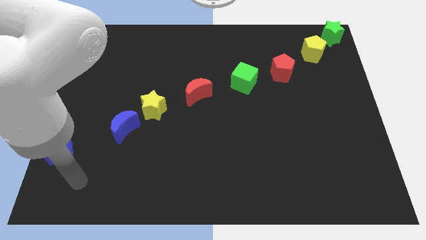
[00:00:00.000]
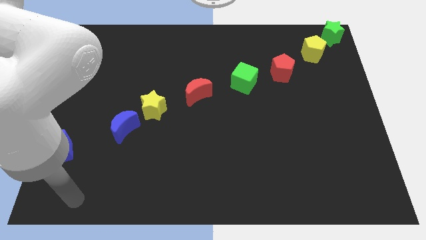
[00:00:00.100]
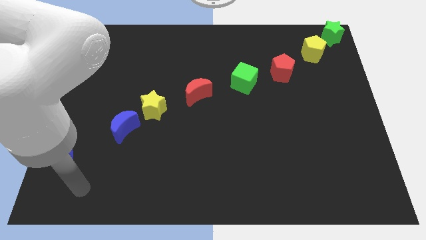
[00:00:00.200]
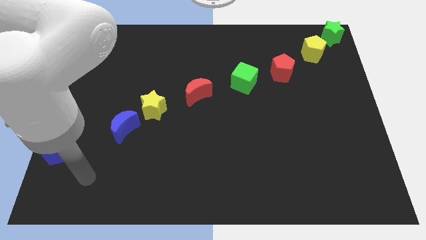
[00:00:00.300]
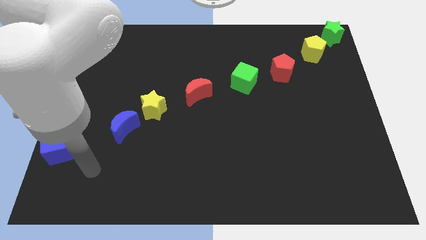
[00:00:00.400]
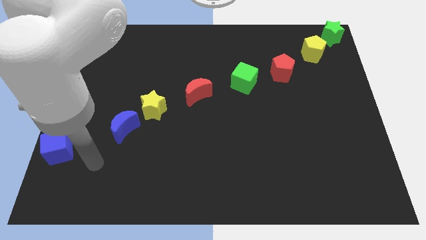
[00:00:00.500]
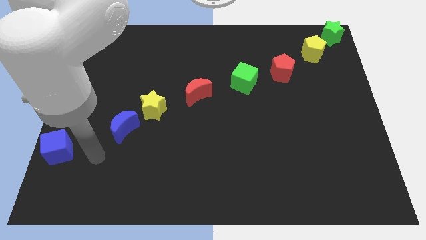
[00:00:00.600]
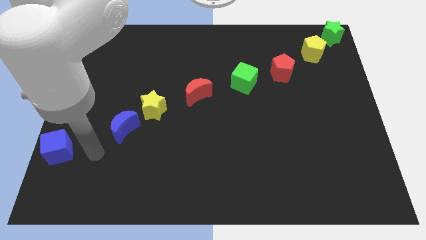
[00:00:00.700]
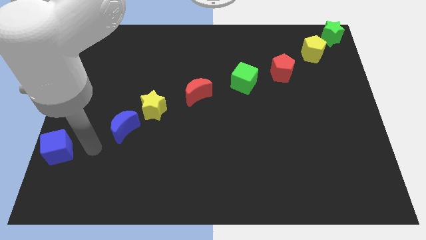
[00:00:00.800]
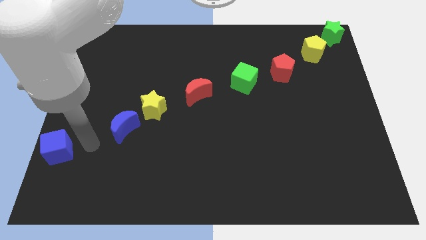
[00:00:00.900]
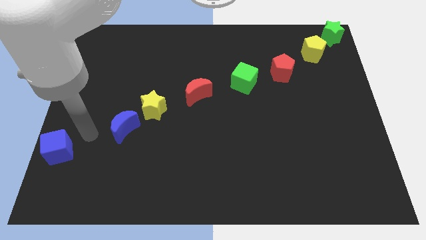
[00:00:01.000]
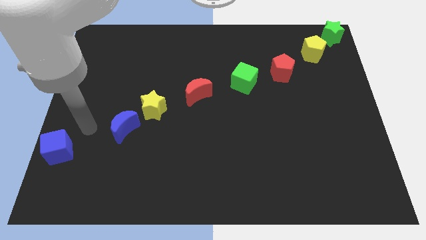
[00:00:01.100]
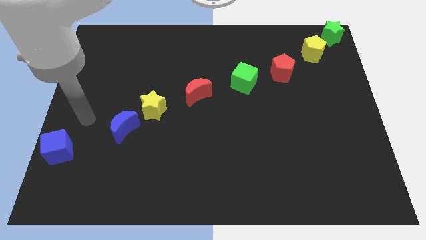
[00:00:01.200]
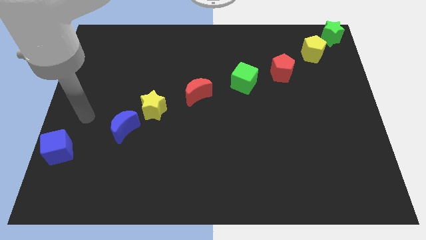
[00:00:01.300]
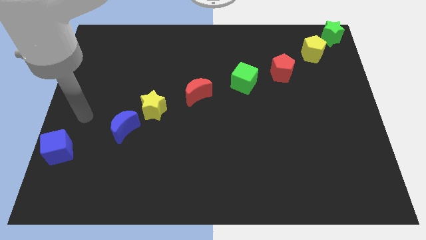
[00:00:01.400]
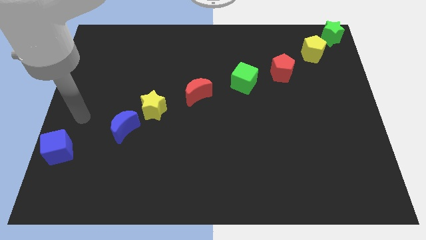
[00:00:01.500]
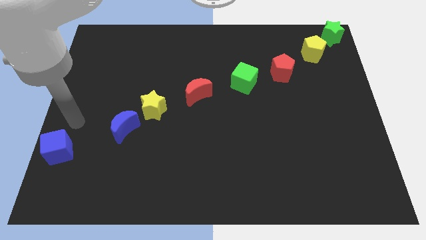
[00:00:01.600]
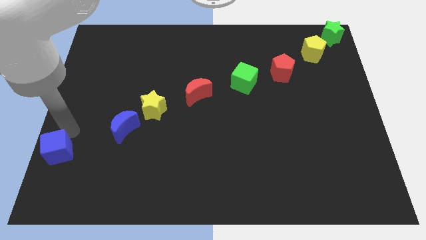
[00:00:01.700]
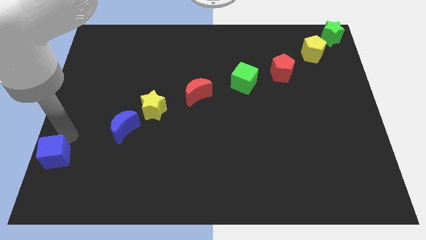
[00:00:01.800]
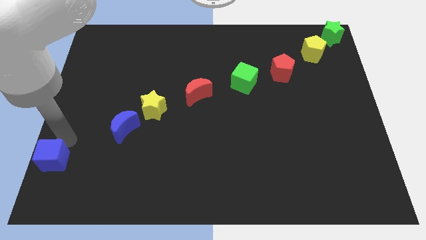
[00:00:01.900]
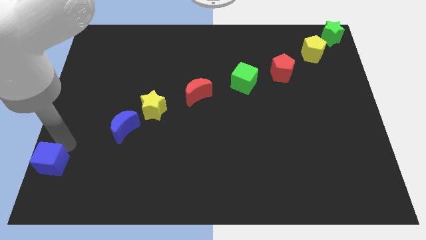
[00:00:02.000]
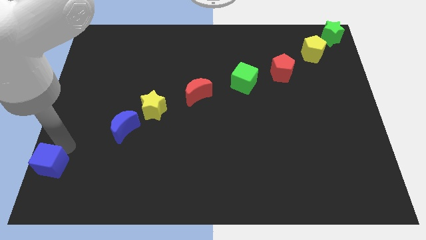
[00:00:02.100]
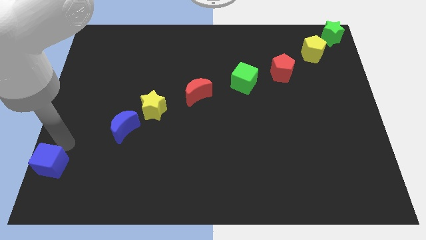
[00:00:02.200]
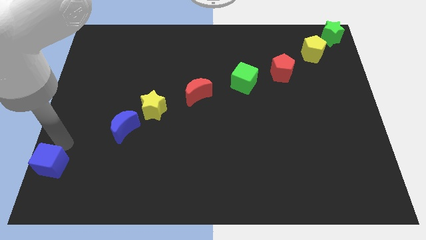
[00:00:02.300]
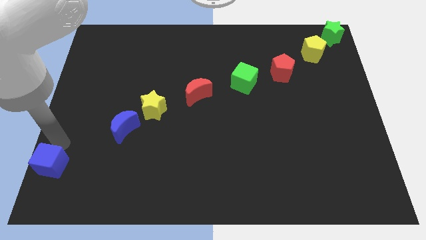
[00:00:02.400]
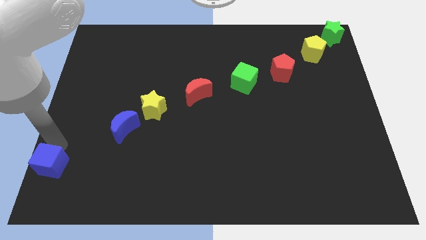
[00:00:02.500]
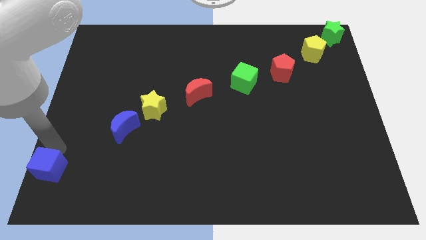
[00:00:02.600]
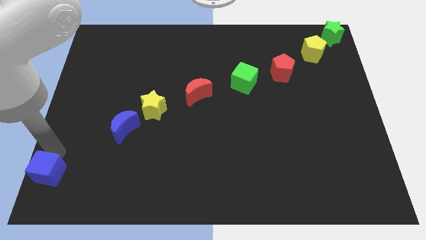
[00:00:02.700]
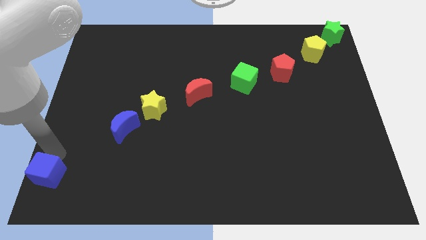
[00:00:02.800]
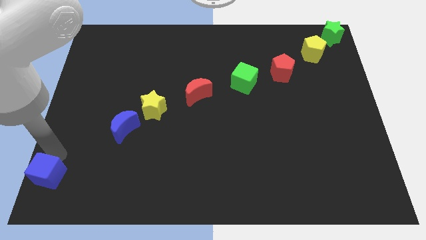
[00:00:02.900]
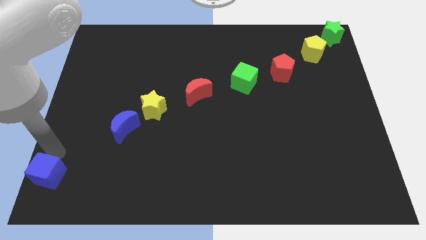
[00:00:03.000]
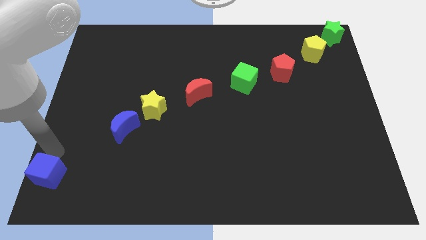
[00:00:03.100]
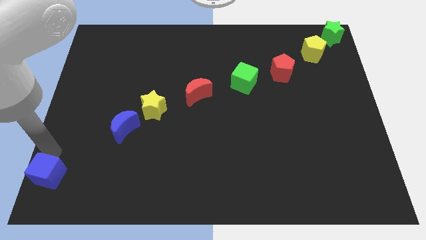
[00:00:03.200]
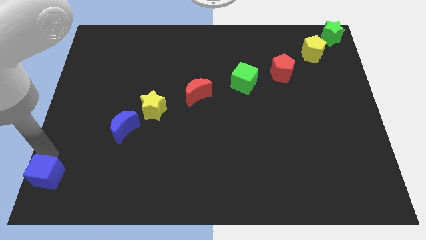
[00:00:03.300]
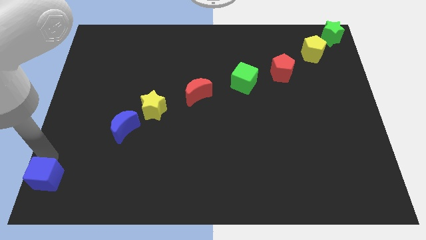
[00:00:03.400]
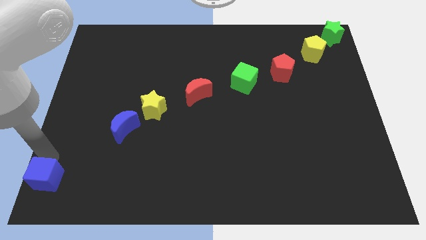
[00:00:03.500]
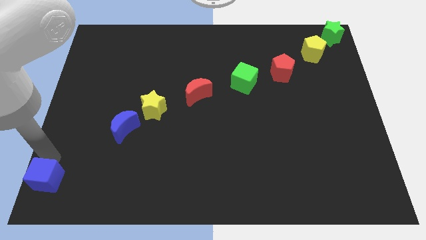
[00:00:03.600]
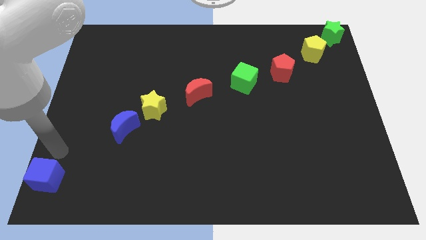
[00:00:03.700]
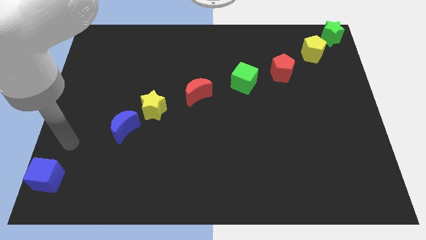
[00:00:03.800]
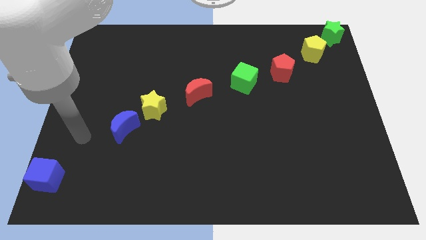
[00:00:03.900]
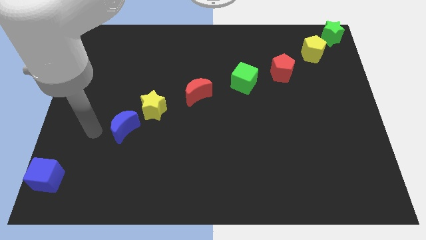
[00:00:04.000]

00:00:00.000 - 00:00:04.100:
push the blue square to the bottom left

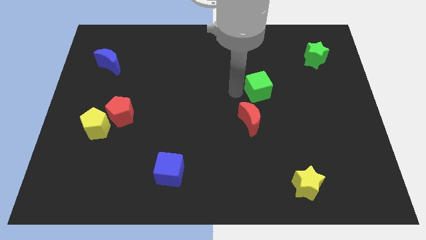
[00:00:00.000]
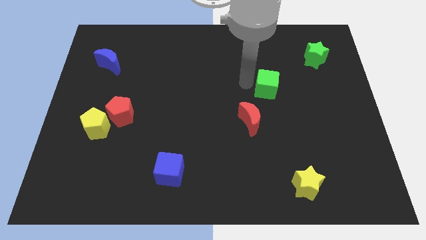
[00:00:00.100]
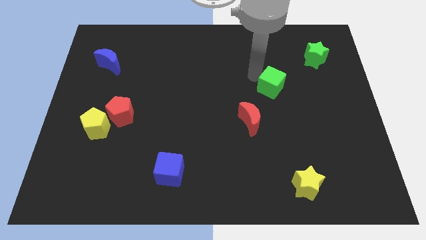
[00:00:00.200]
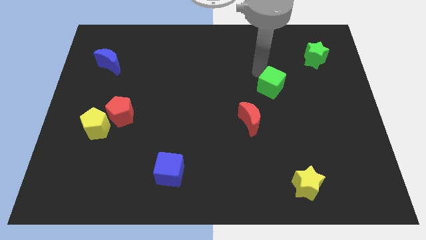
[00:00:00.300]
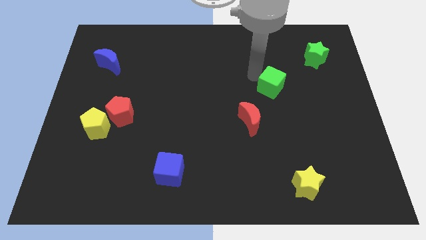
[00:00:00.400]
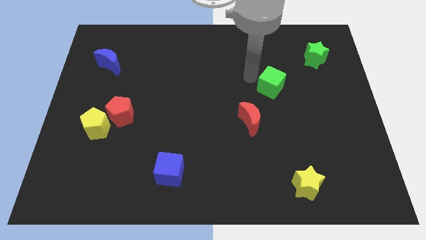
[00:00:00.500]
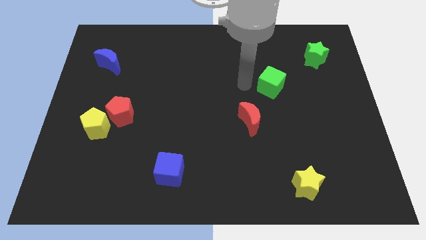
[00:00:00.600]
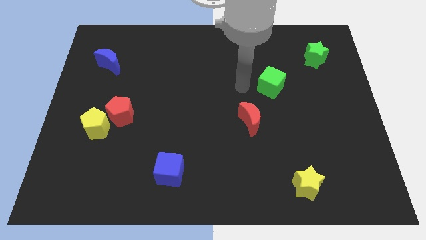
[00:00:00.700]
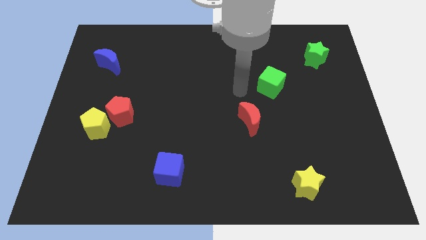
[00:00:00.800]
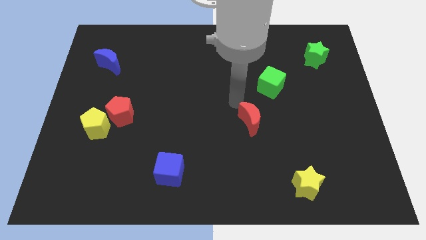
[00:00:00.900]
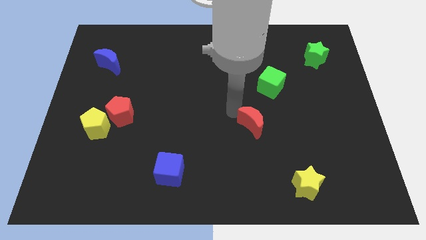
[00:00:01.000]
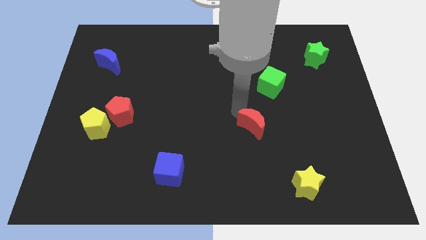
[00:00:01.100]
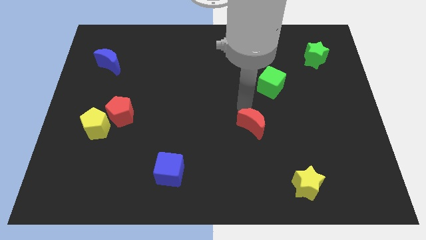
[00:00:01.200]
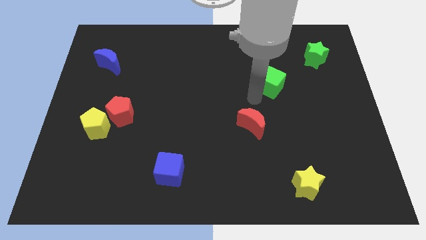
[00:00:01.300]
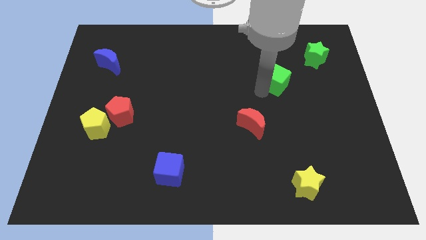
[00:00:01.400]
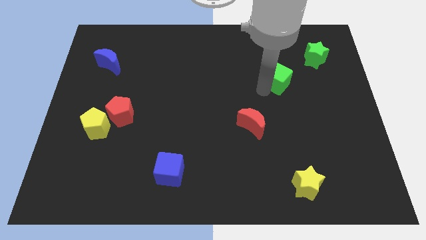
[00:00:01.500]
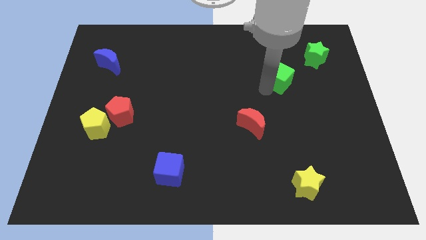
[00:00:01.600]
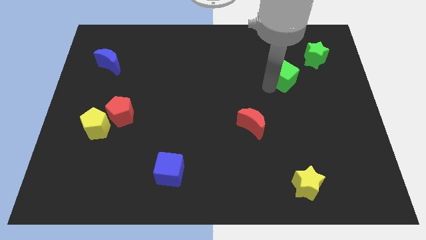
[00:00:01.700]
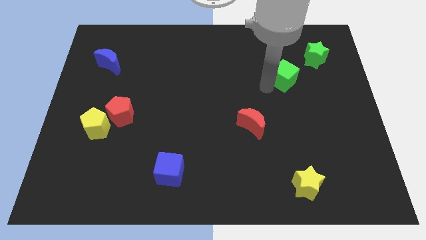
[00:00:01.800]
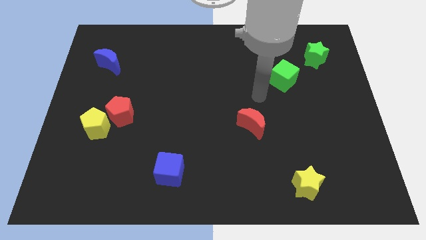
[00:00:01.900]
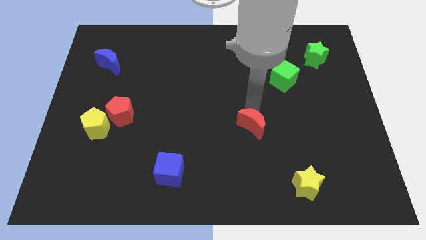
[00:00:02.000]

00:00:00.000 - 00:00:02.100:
separate green cube and red moon

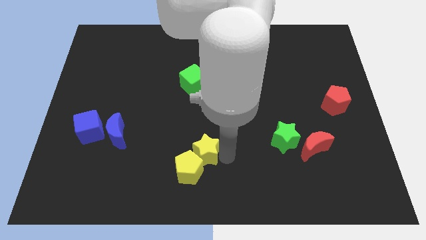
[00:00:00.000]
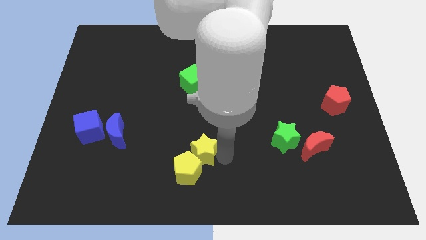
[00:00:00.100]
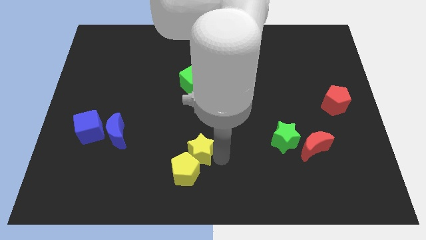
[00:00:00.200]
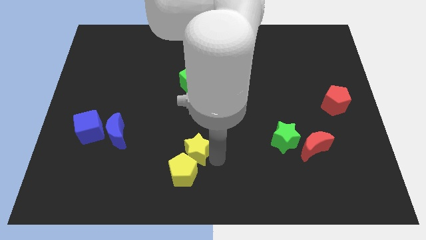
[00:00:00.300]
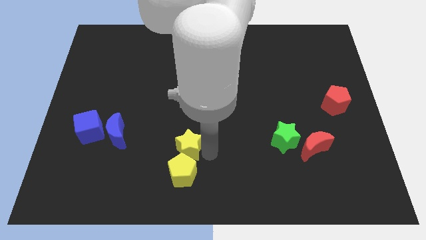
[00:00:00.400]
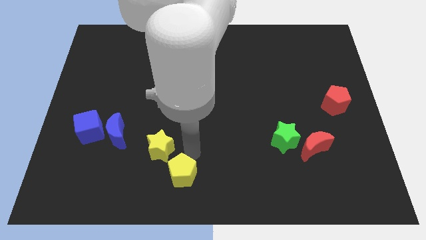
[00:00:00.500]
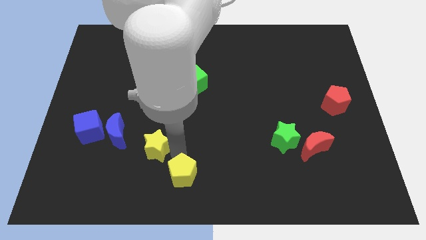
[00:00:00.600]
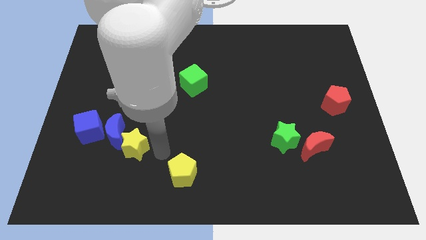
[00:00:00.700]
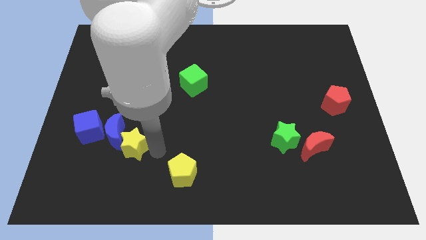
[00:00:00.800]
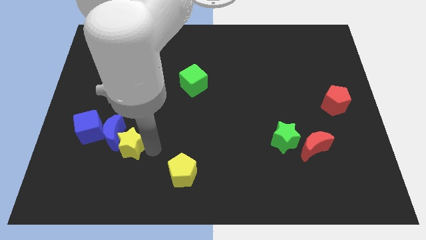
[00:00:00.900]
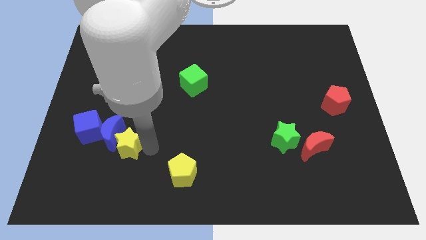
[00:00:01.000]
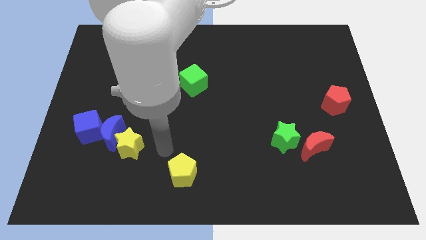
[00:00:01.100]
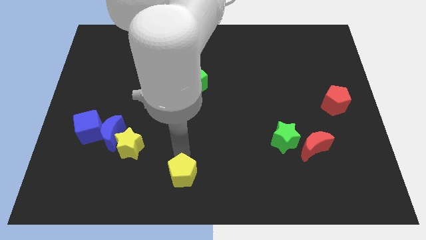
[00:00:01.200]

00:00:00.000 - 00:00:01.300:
push the yellow star into the blue crescent

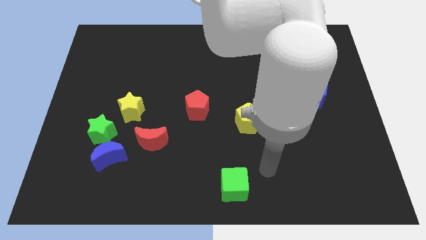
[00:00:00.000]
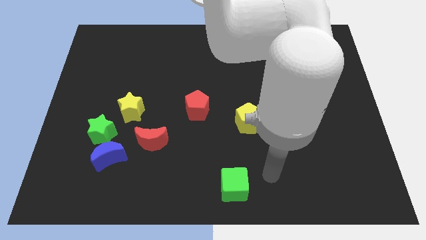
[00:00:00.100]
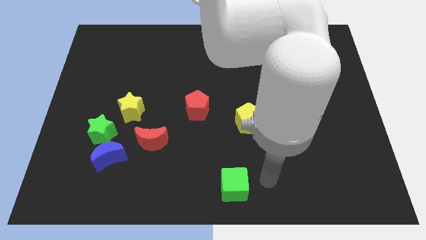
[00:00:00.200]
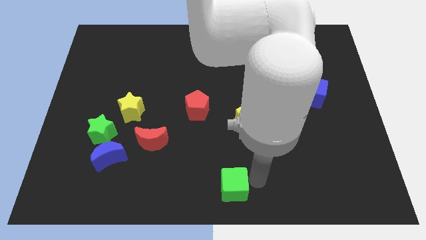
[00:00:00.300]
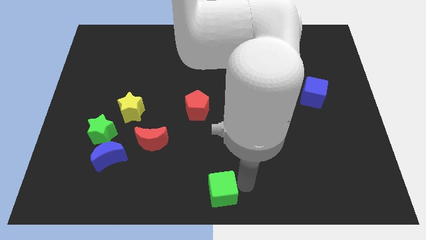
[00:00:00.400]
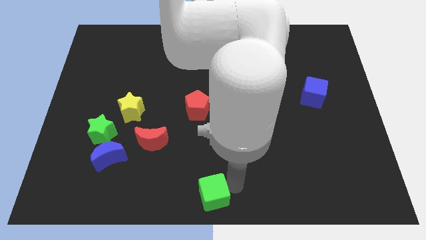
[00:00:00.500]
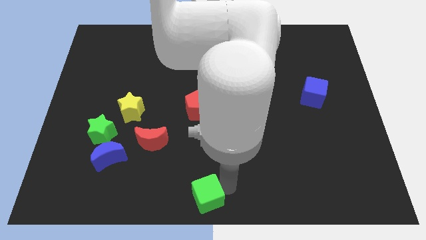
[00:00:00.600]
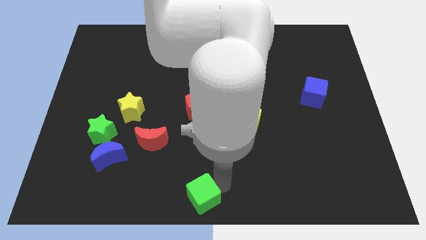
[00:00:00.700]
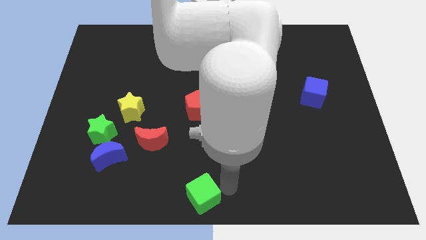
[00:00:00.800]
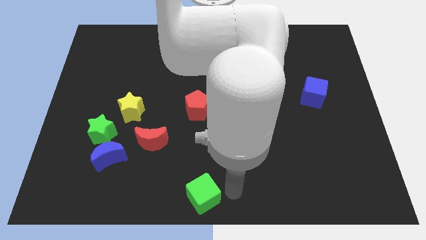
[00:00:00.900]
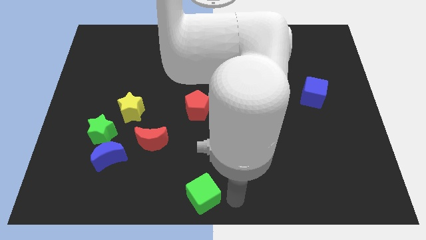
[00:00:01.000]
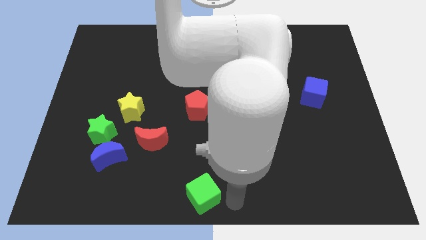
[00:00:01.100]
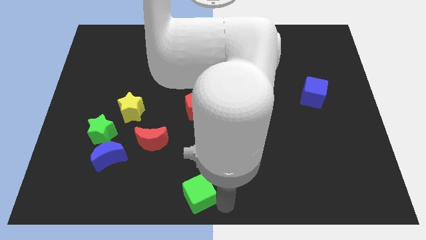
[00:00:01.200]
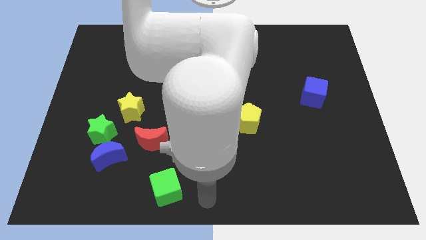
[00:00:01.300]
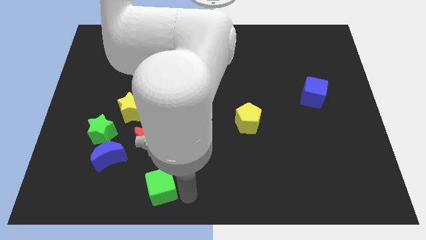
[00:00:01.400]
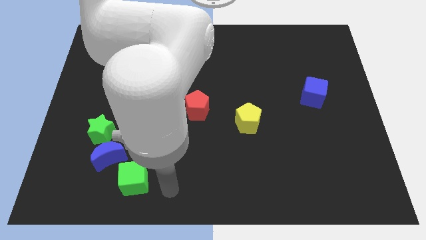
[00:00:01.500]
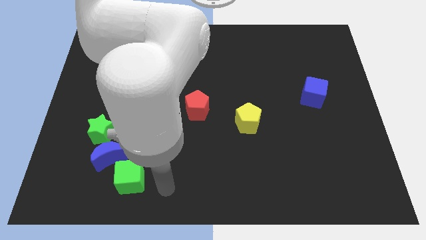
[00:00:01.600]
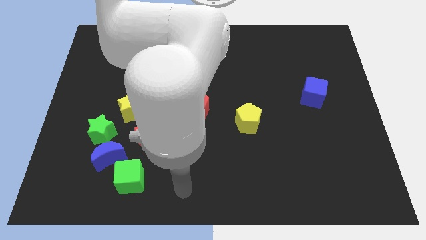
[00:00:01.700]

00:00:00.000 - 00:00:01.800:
move the green cube bottom of the blue moon
